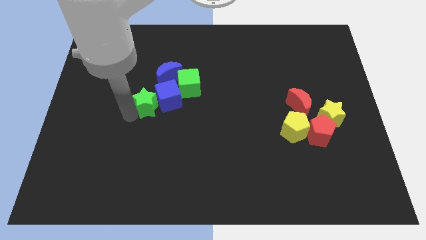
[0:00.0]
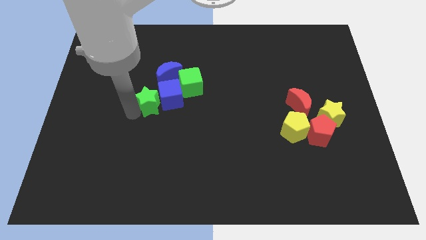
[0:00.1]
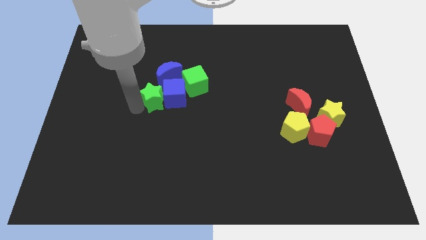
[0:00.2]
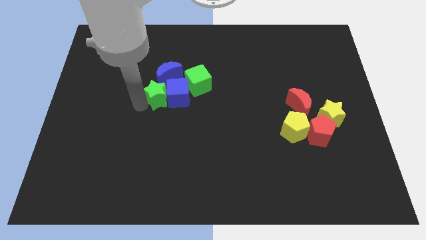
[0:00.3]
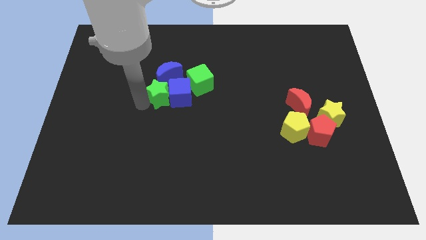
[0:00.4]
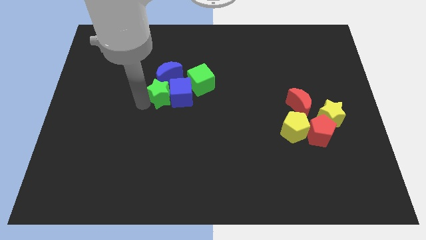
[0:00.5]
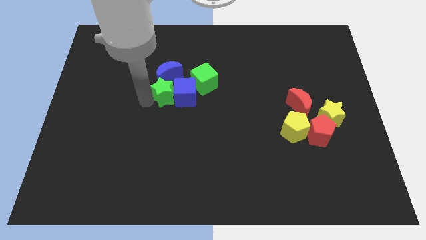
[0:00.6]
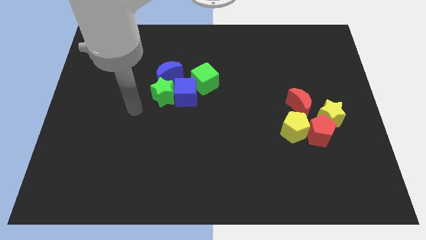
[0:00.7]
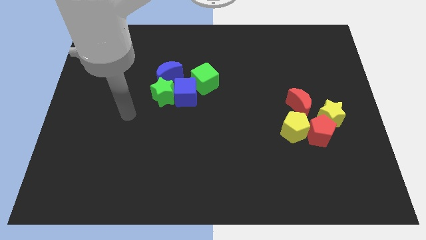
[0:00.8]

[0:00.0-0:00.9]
push the green star to the left side of the blue cube on the board

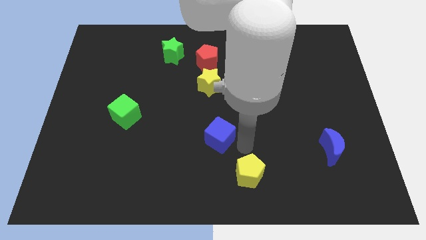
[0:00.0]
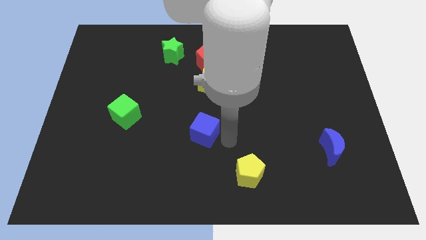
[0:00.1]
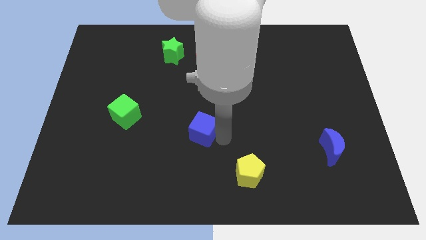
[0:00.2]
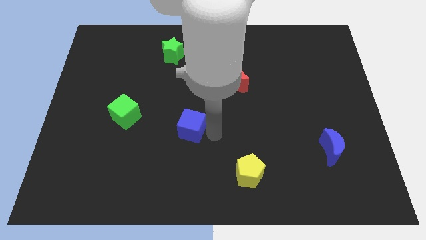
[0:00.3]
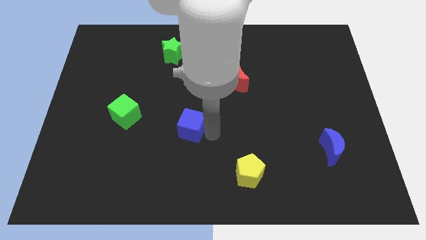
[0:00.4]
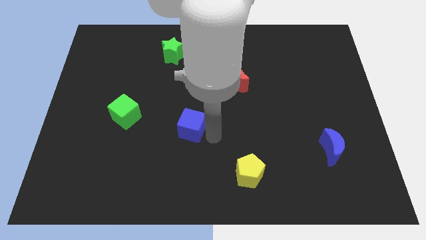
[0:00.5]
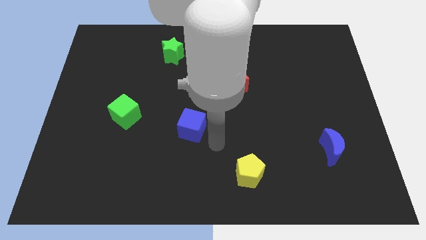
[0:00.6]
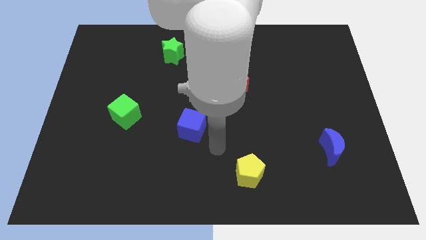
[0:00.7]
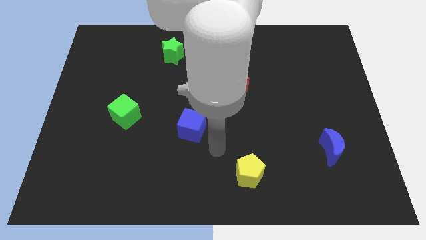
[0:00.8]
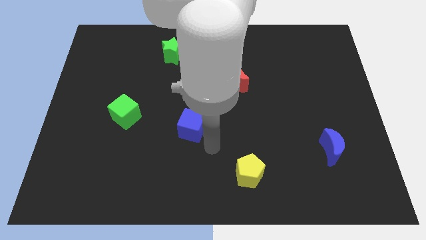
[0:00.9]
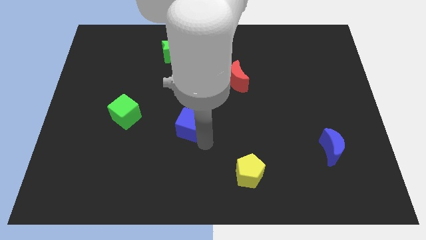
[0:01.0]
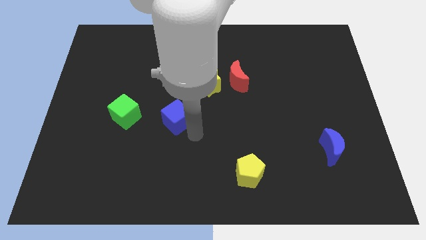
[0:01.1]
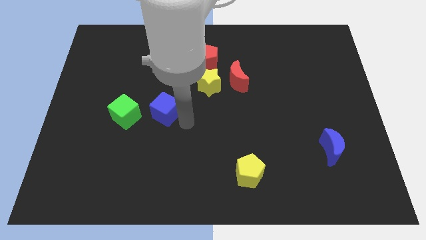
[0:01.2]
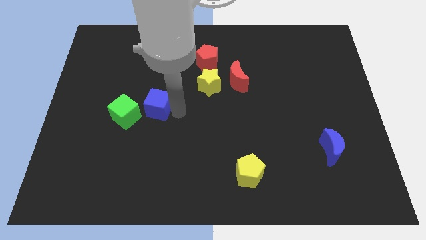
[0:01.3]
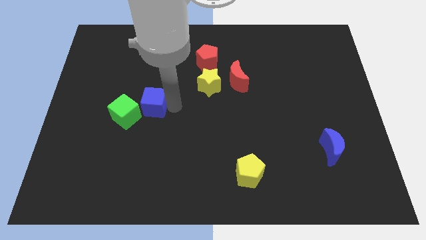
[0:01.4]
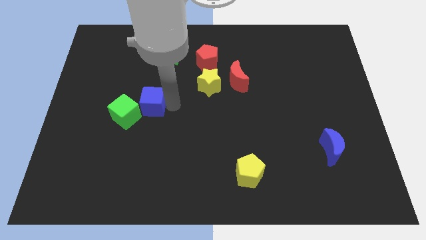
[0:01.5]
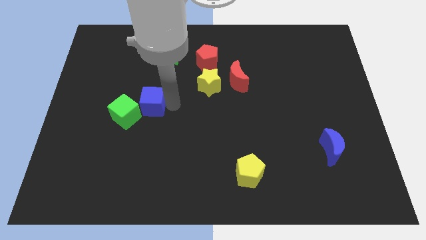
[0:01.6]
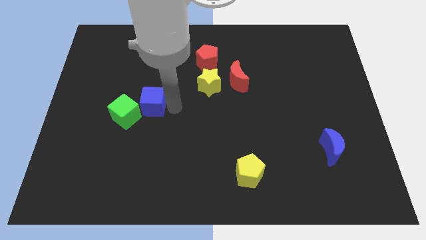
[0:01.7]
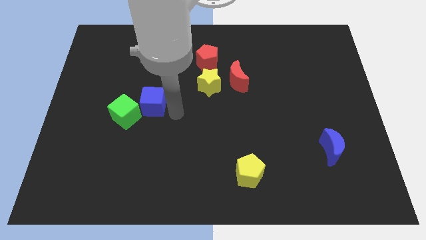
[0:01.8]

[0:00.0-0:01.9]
push the blue cube into the green cube

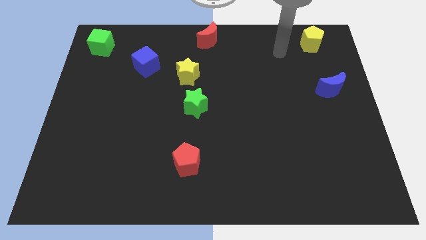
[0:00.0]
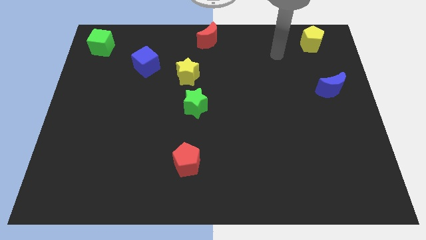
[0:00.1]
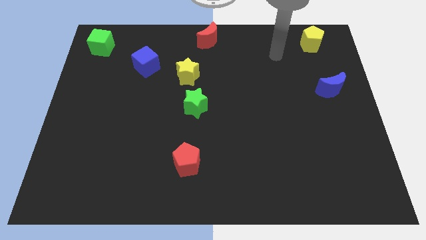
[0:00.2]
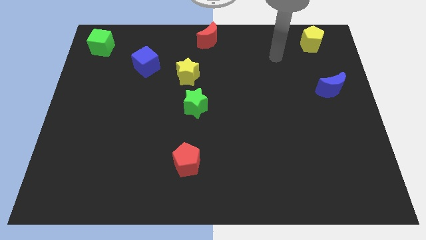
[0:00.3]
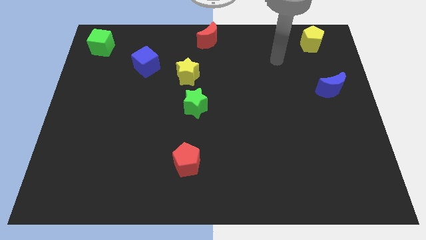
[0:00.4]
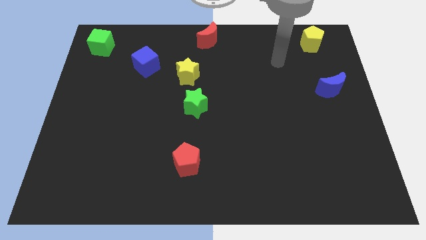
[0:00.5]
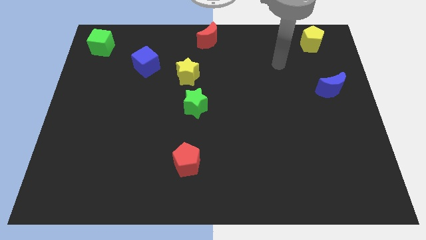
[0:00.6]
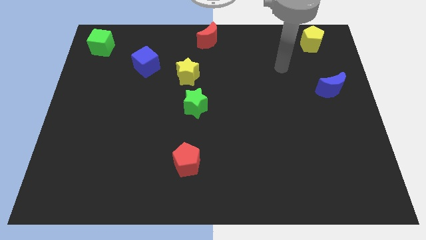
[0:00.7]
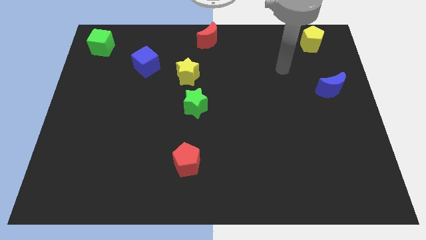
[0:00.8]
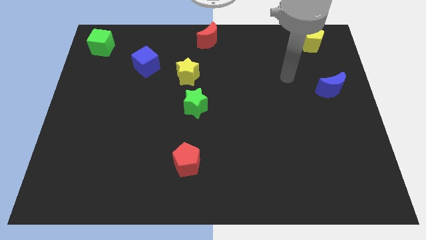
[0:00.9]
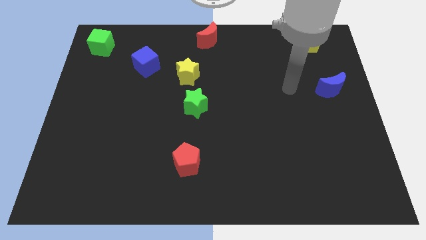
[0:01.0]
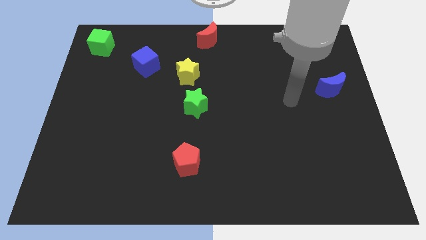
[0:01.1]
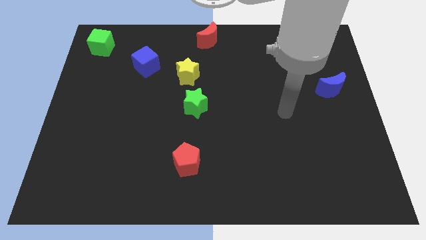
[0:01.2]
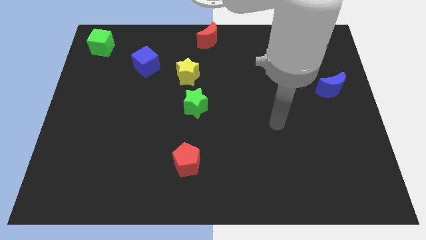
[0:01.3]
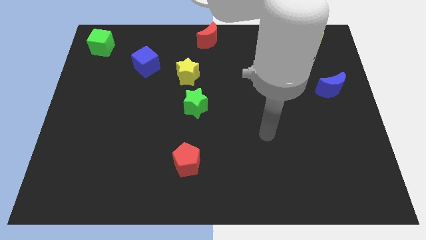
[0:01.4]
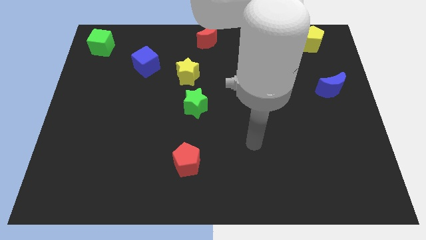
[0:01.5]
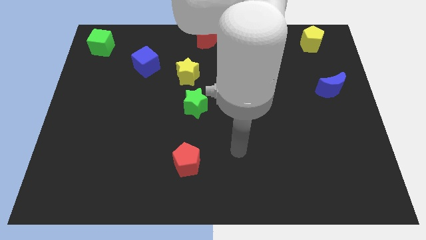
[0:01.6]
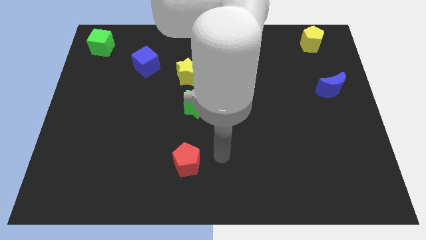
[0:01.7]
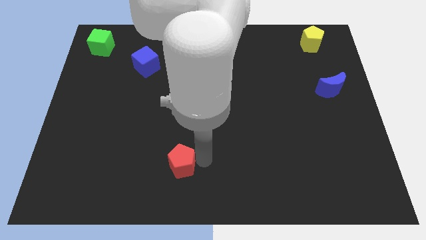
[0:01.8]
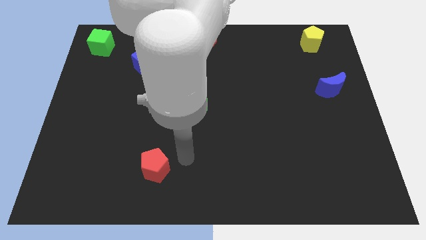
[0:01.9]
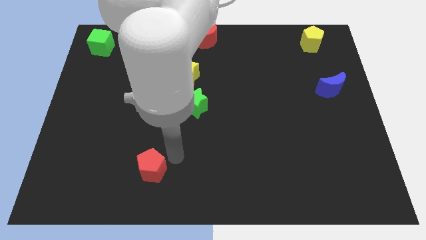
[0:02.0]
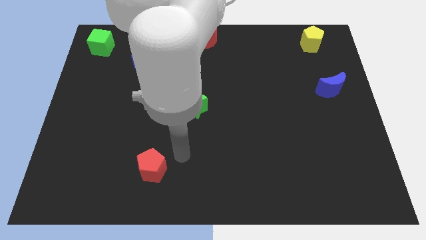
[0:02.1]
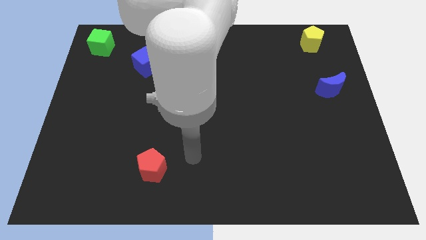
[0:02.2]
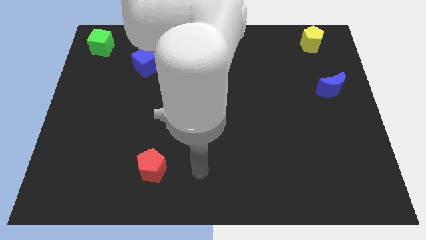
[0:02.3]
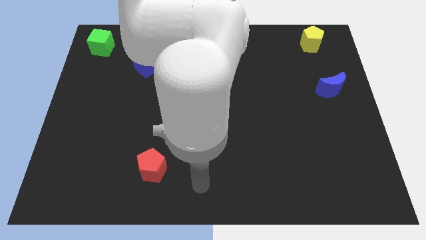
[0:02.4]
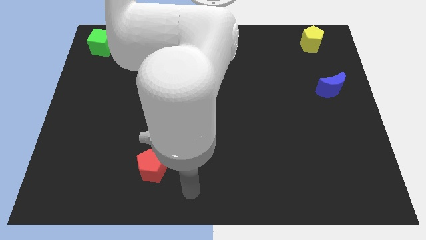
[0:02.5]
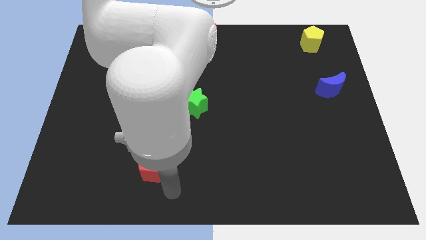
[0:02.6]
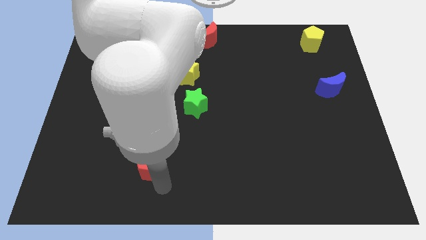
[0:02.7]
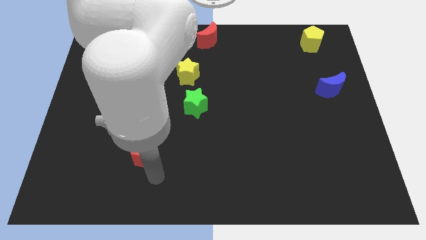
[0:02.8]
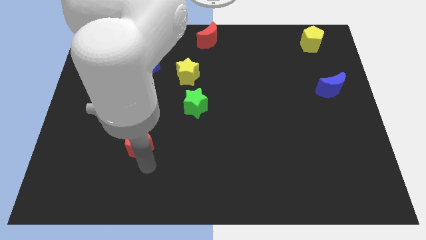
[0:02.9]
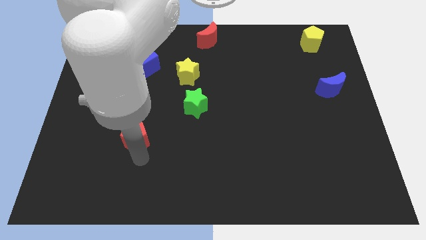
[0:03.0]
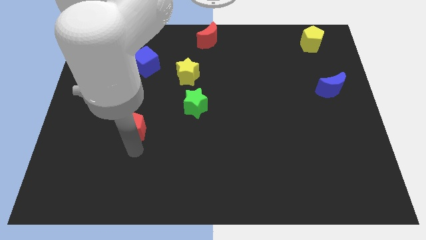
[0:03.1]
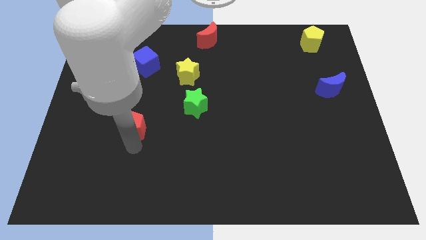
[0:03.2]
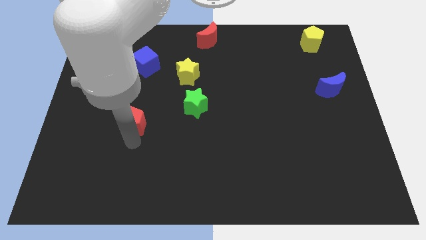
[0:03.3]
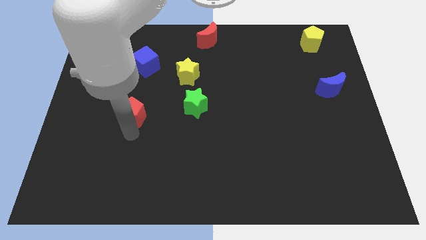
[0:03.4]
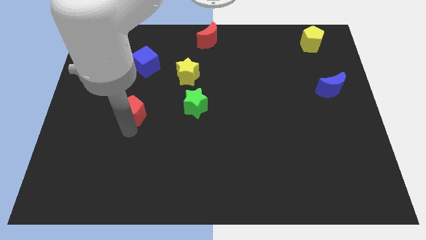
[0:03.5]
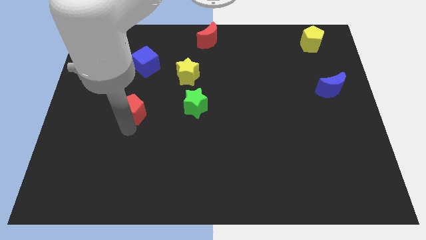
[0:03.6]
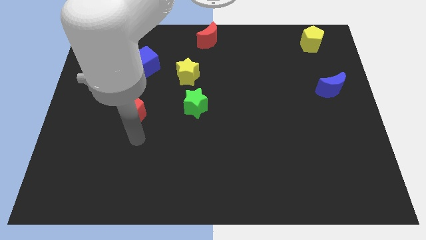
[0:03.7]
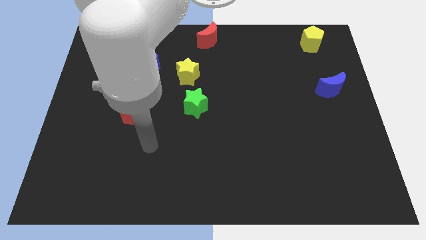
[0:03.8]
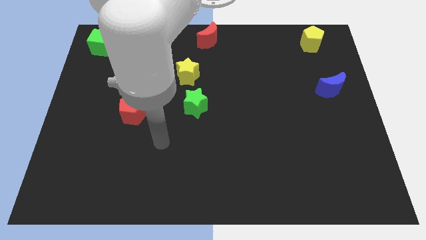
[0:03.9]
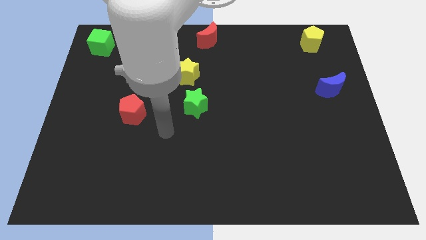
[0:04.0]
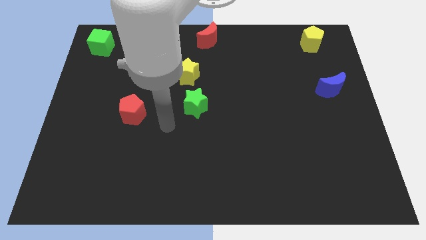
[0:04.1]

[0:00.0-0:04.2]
place the red pentagon to the left of the green star

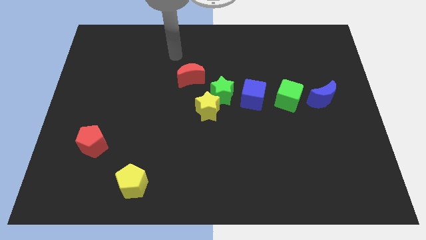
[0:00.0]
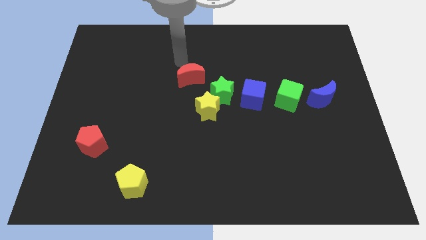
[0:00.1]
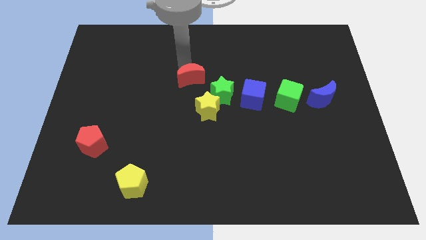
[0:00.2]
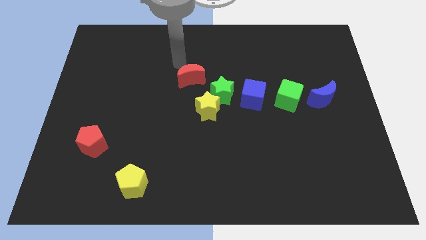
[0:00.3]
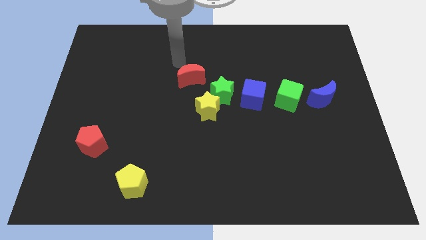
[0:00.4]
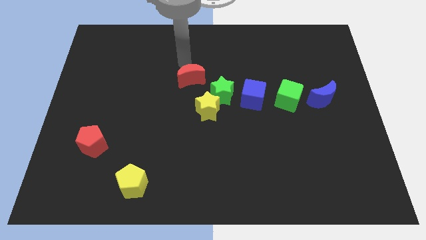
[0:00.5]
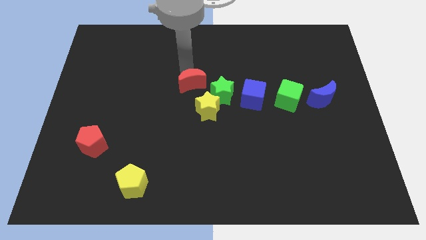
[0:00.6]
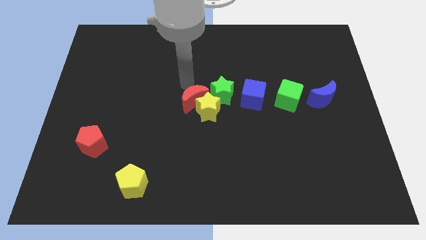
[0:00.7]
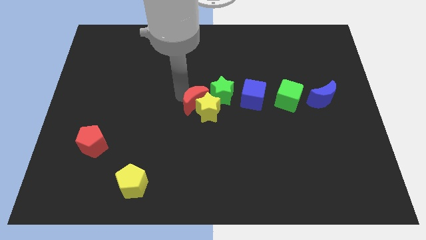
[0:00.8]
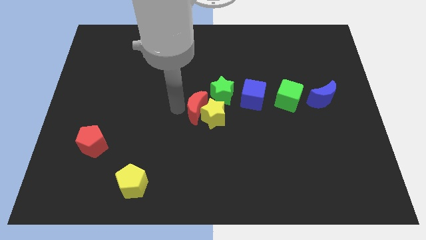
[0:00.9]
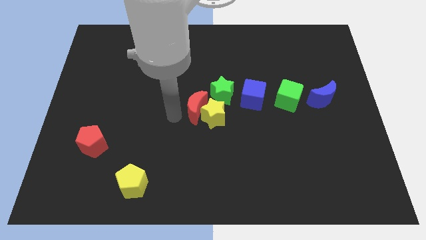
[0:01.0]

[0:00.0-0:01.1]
push the red crescent in to the yellow star

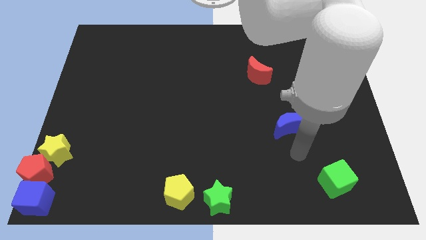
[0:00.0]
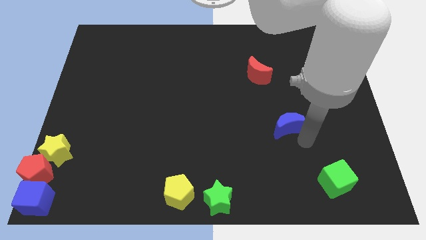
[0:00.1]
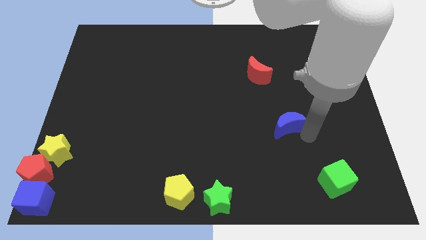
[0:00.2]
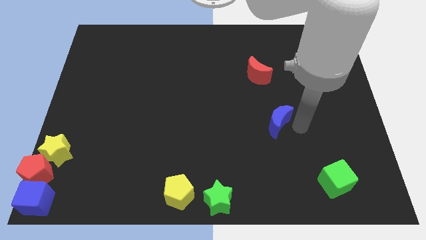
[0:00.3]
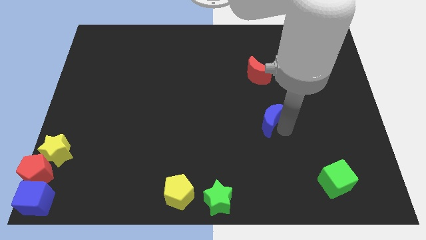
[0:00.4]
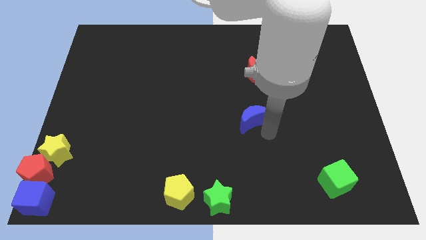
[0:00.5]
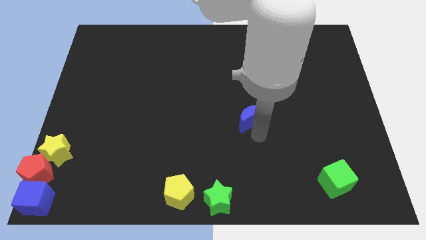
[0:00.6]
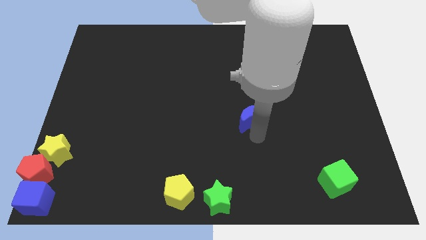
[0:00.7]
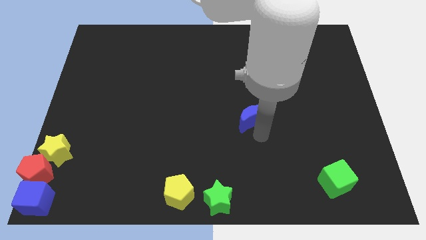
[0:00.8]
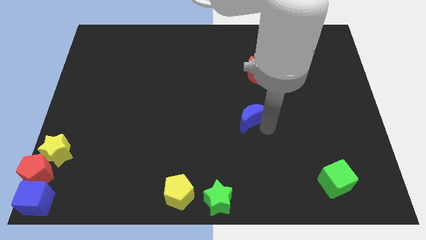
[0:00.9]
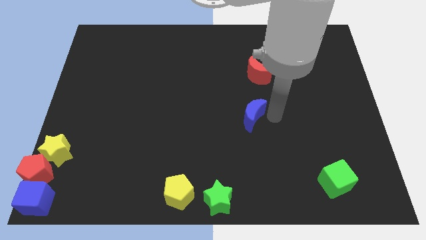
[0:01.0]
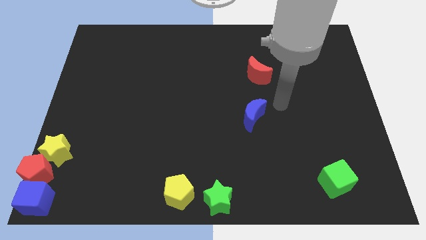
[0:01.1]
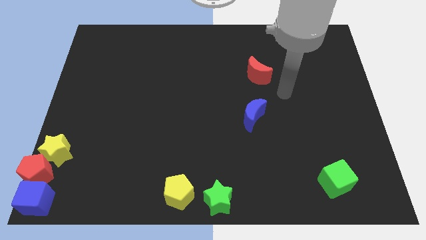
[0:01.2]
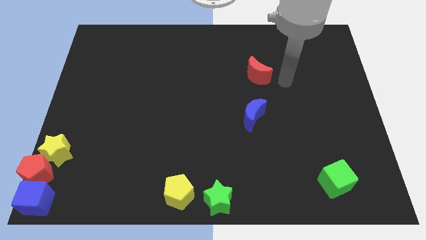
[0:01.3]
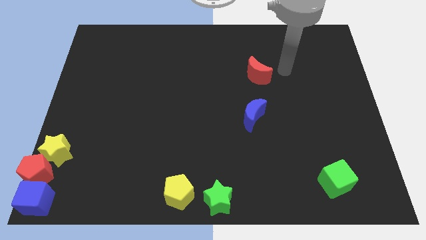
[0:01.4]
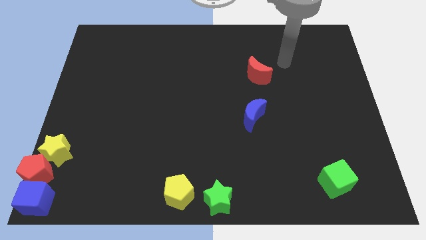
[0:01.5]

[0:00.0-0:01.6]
move the blue crescent vertically below the bottom side of the red moon
